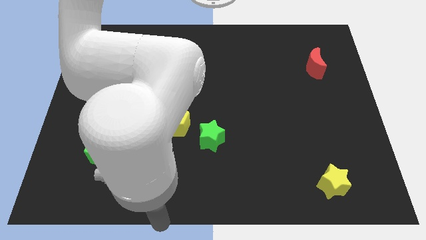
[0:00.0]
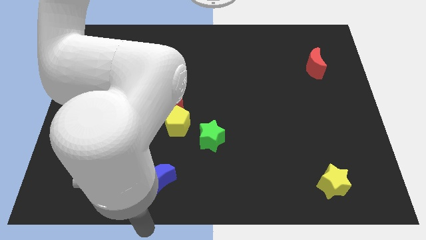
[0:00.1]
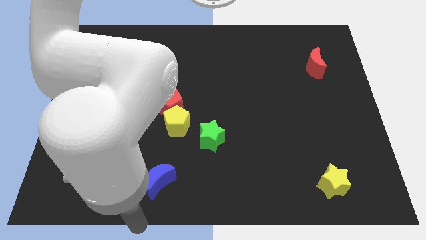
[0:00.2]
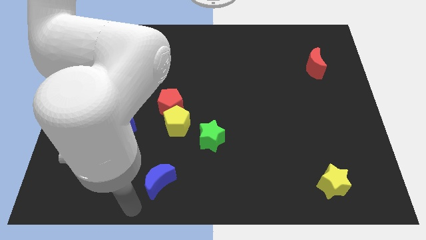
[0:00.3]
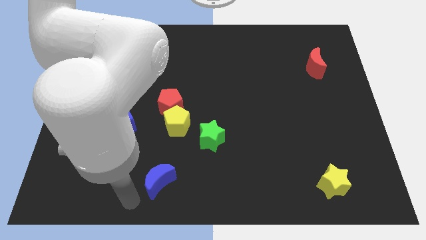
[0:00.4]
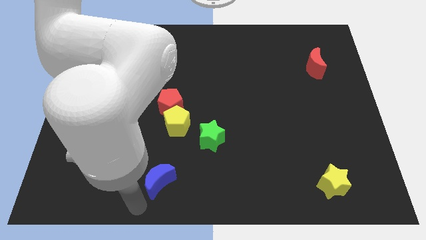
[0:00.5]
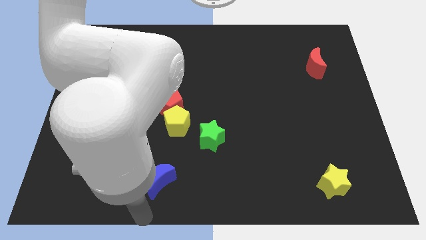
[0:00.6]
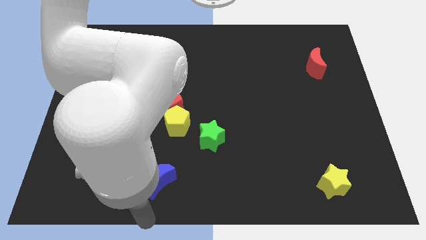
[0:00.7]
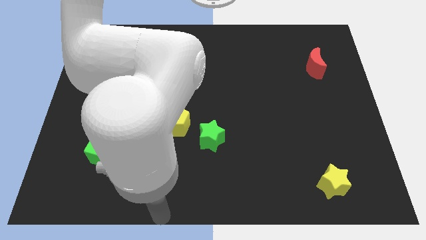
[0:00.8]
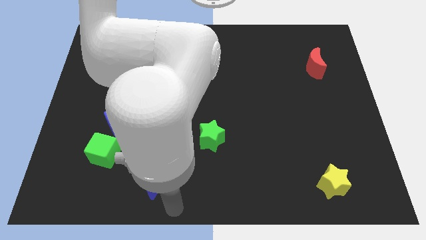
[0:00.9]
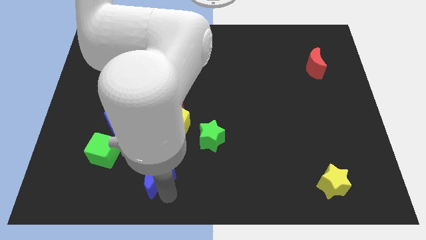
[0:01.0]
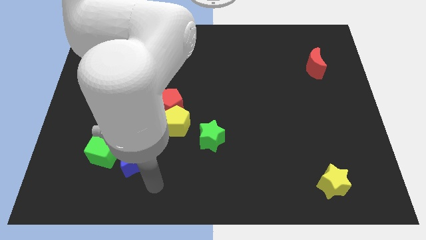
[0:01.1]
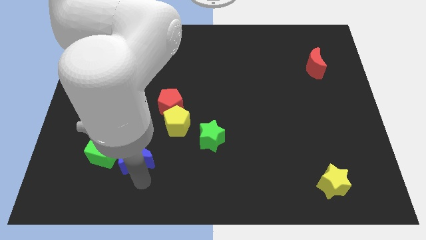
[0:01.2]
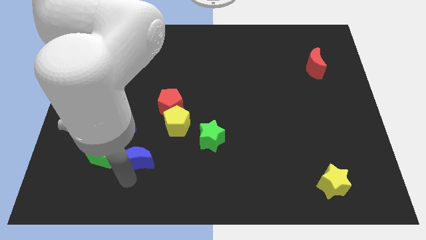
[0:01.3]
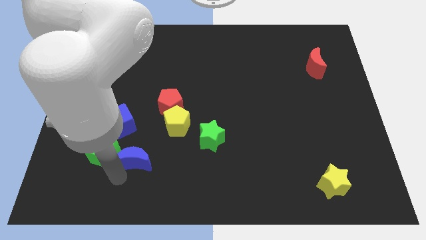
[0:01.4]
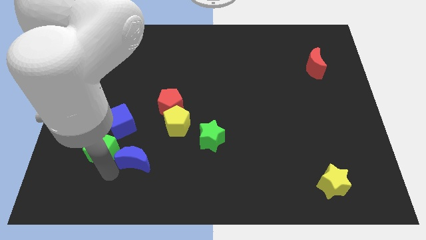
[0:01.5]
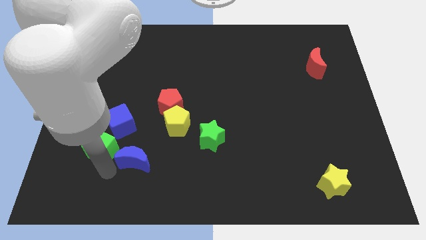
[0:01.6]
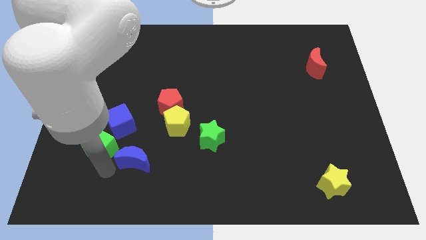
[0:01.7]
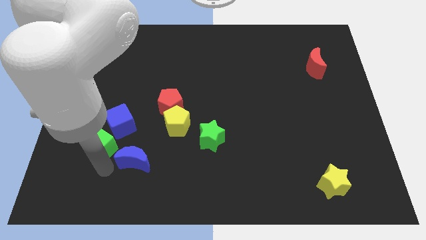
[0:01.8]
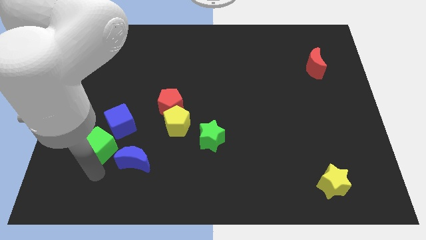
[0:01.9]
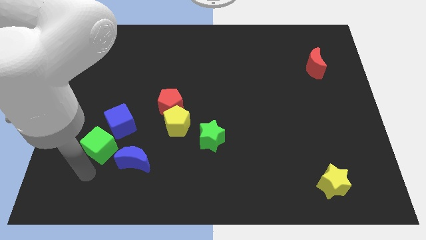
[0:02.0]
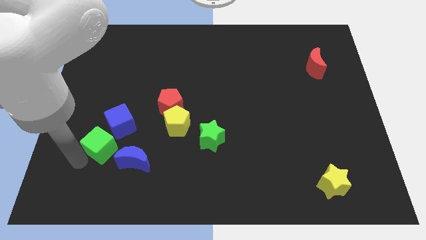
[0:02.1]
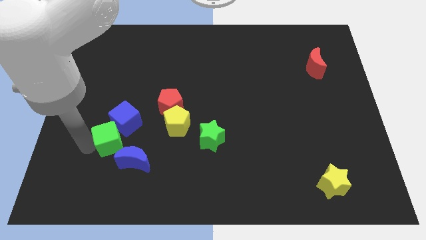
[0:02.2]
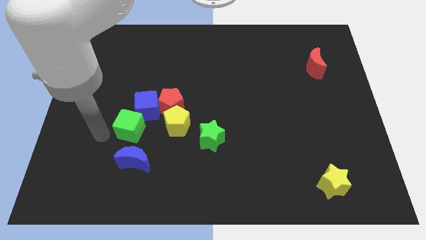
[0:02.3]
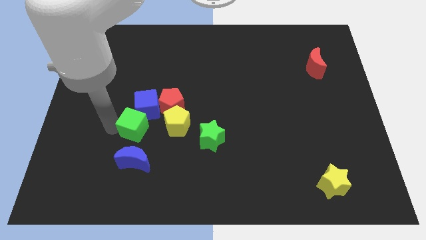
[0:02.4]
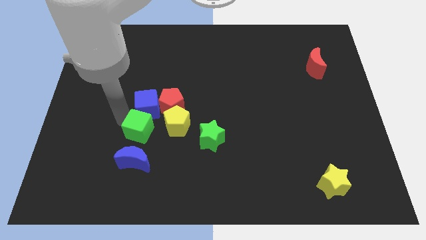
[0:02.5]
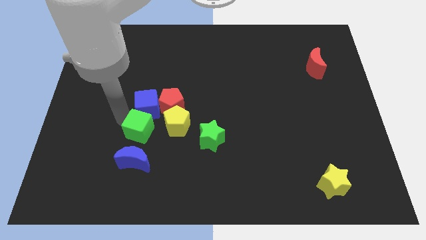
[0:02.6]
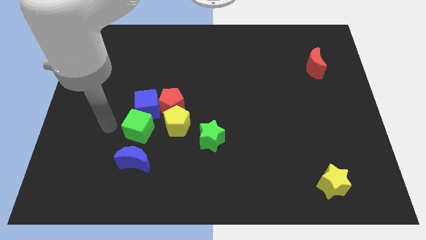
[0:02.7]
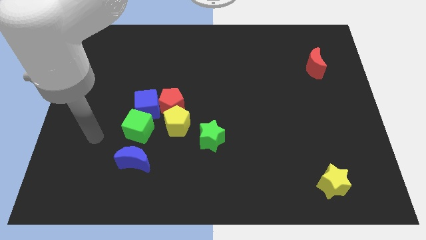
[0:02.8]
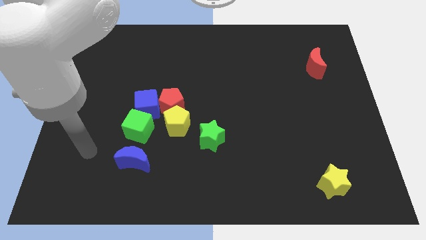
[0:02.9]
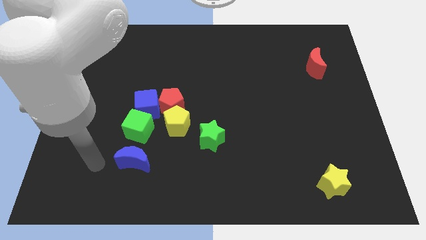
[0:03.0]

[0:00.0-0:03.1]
make a vertical line out of blue blocks and green cube

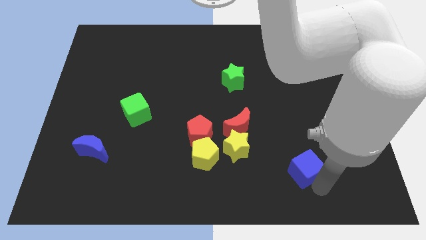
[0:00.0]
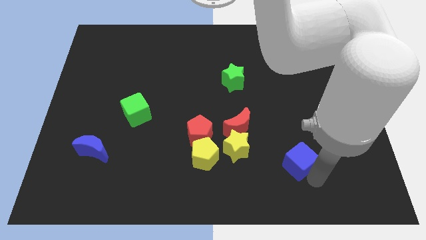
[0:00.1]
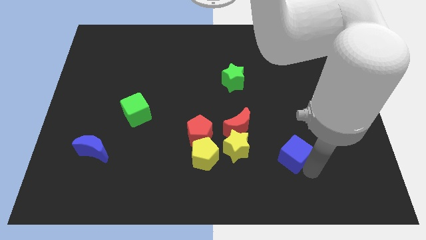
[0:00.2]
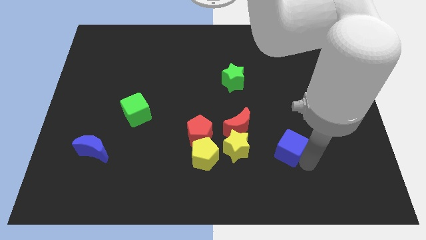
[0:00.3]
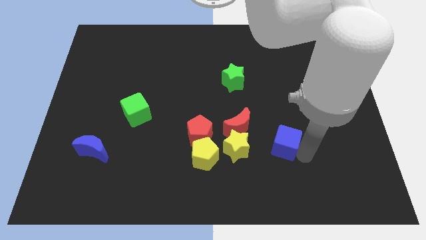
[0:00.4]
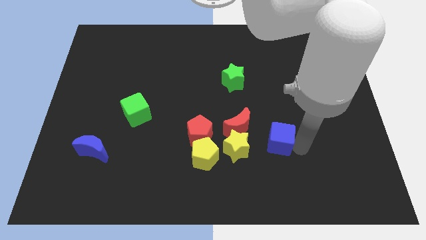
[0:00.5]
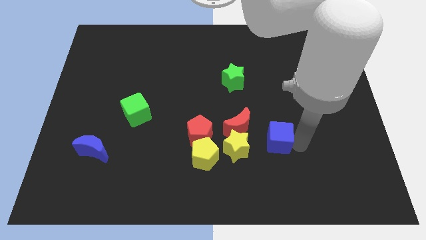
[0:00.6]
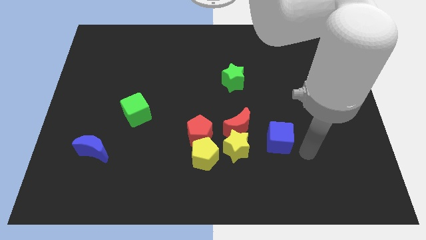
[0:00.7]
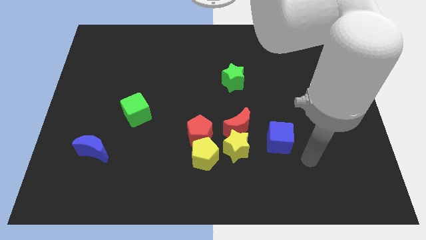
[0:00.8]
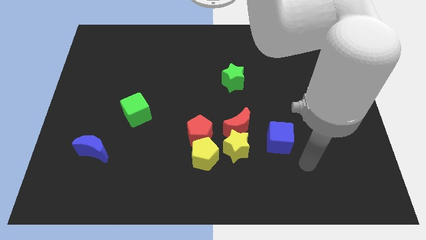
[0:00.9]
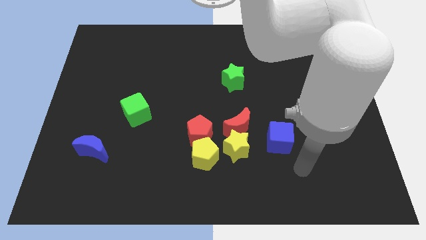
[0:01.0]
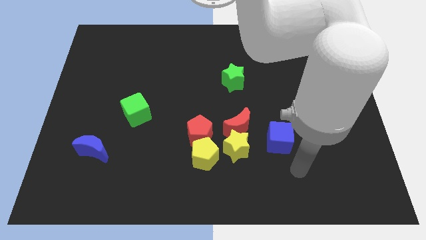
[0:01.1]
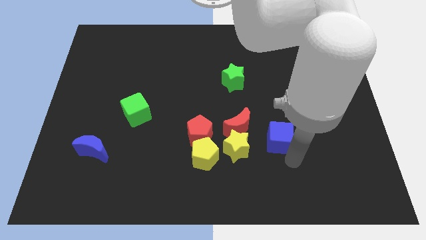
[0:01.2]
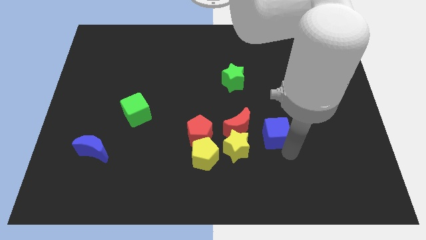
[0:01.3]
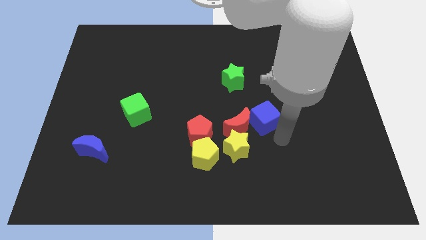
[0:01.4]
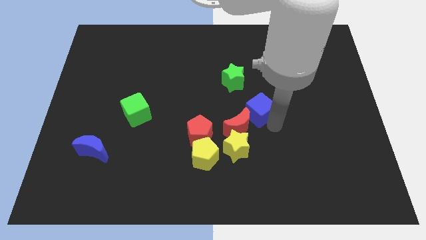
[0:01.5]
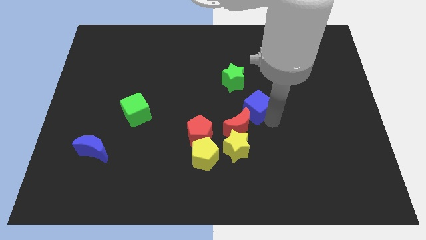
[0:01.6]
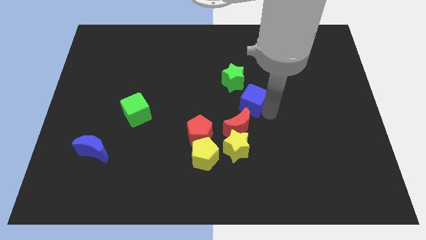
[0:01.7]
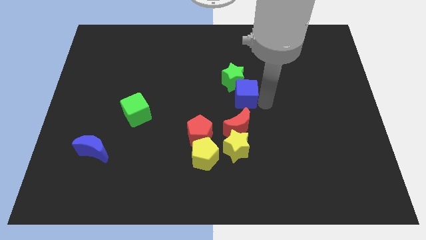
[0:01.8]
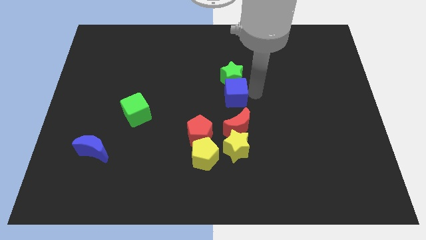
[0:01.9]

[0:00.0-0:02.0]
move the blue cube into the green star

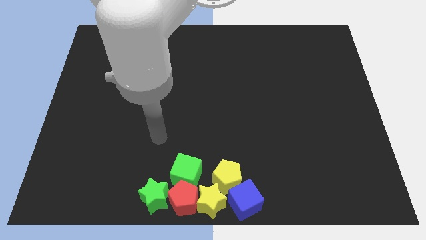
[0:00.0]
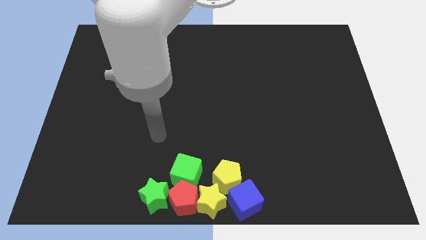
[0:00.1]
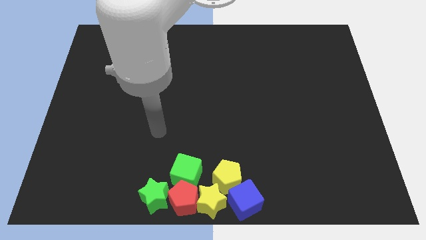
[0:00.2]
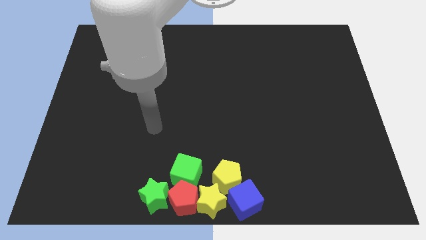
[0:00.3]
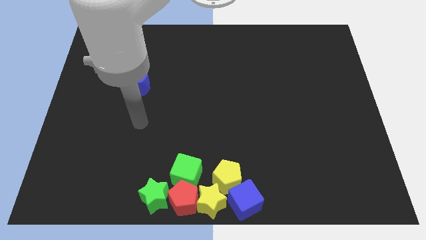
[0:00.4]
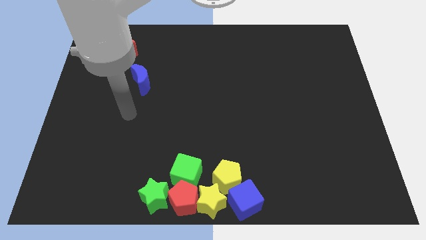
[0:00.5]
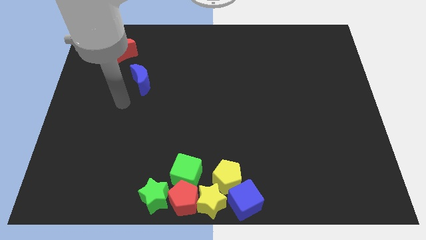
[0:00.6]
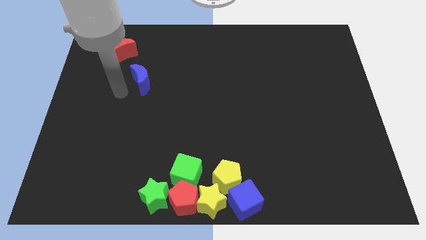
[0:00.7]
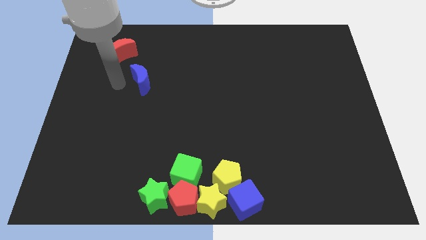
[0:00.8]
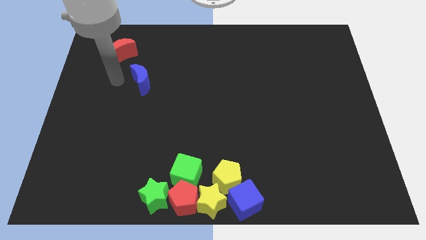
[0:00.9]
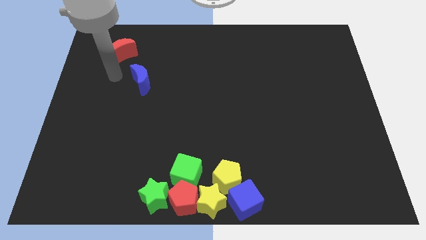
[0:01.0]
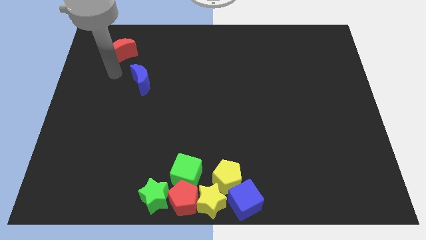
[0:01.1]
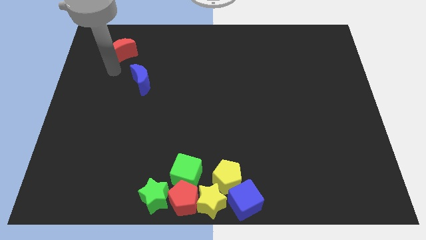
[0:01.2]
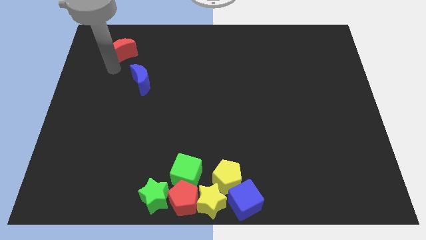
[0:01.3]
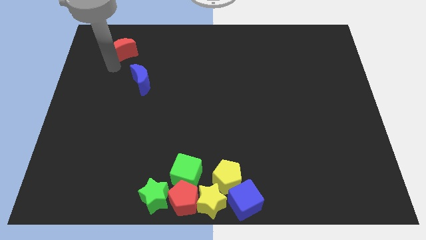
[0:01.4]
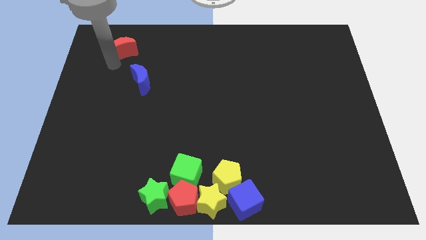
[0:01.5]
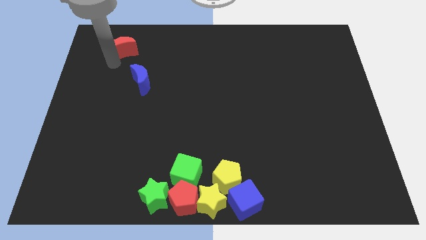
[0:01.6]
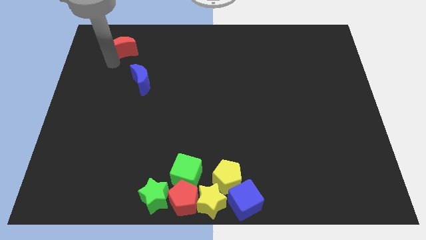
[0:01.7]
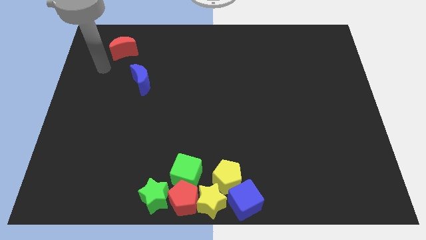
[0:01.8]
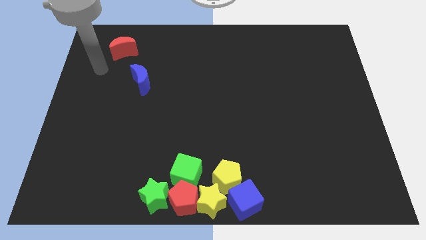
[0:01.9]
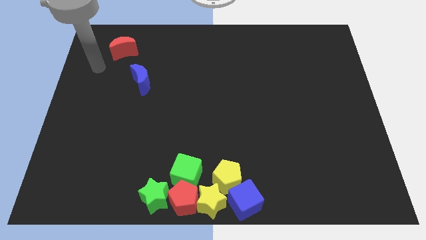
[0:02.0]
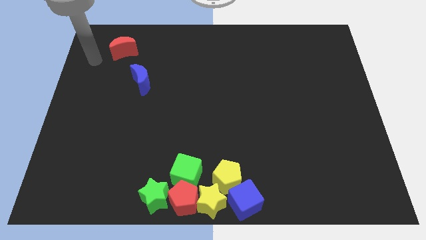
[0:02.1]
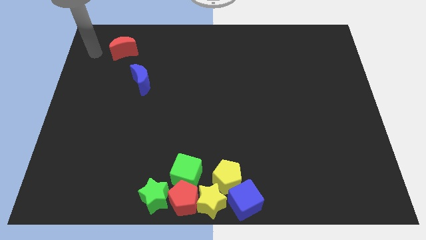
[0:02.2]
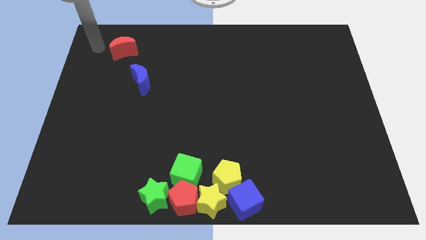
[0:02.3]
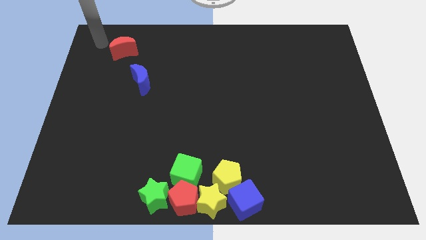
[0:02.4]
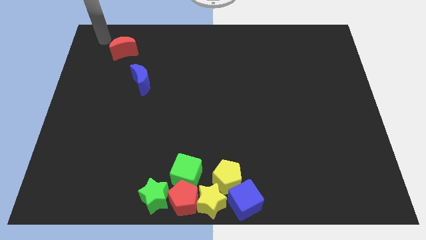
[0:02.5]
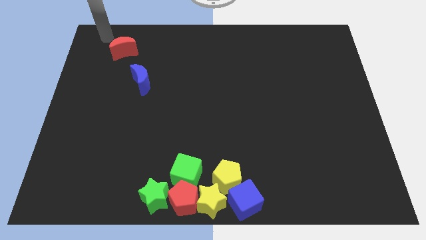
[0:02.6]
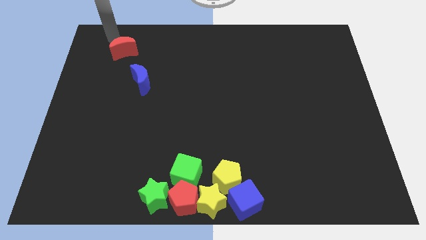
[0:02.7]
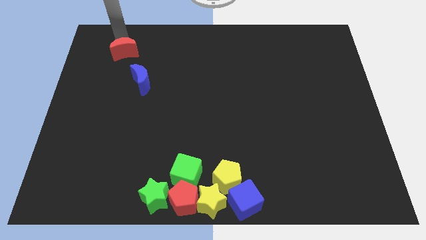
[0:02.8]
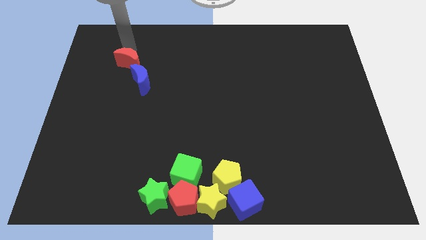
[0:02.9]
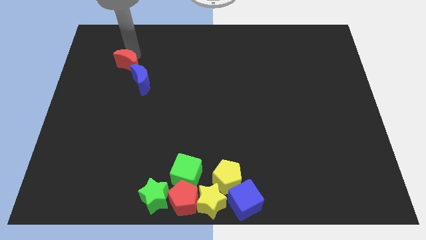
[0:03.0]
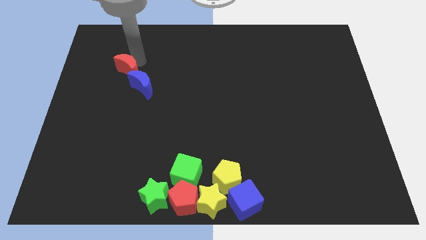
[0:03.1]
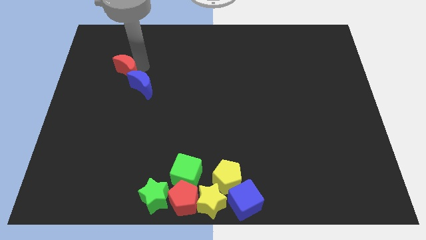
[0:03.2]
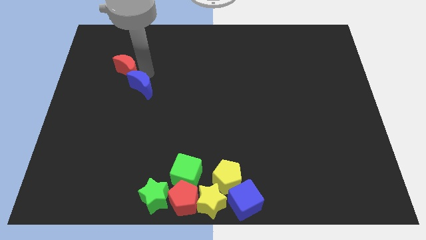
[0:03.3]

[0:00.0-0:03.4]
push the red moon into the blue moon

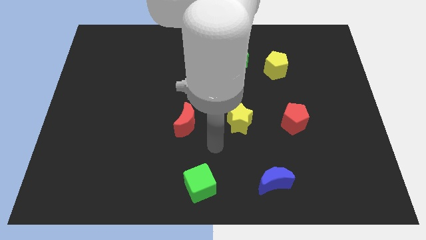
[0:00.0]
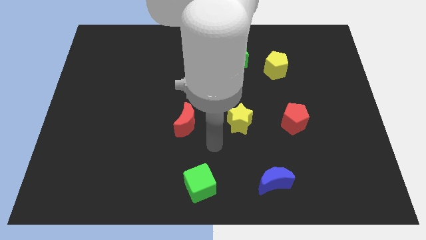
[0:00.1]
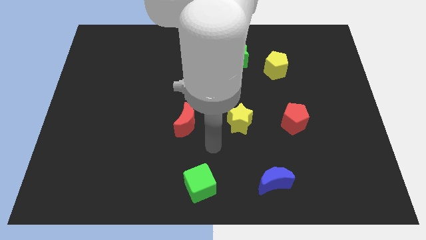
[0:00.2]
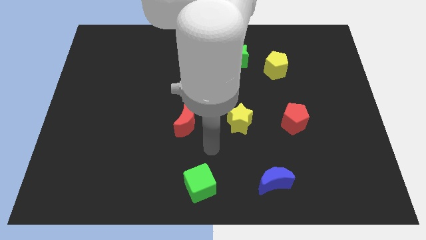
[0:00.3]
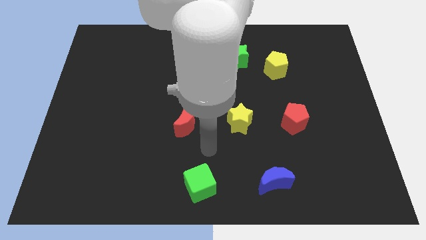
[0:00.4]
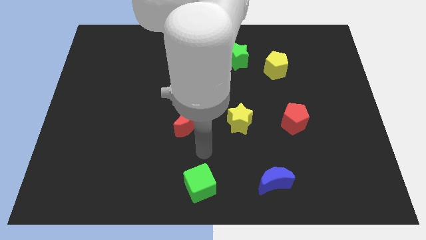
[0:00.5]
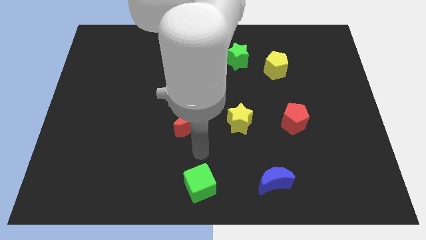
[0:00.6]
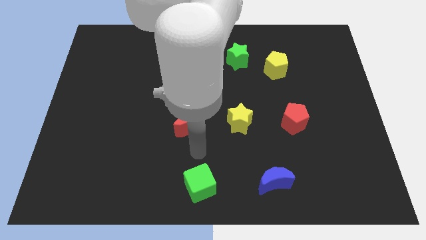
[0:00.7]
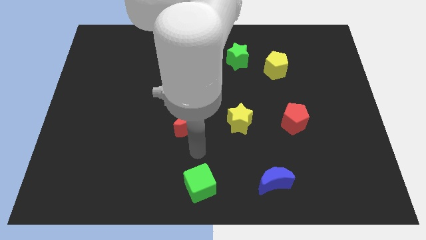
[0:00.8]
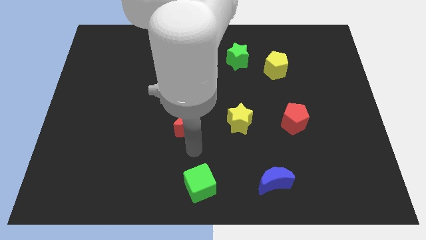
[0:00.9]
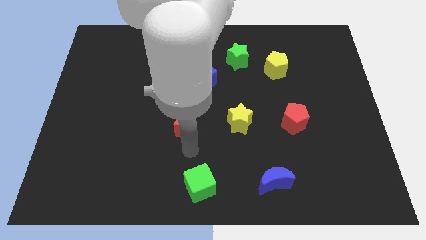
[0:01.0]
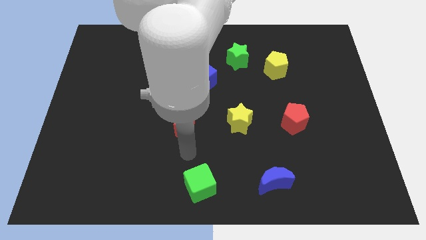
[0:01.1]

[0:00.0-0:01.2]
move your arm towards the red crescent
